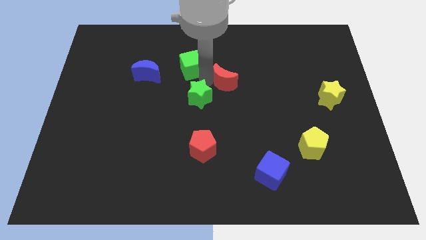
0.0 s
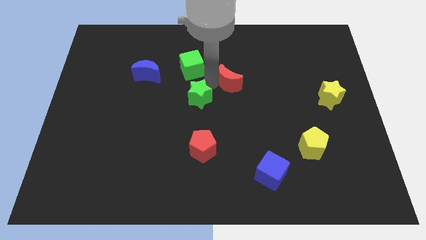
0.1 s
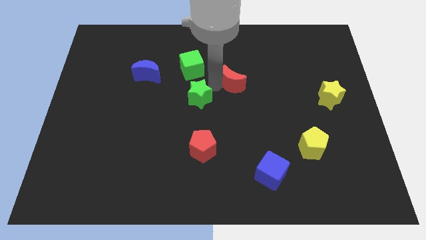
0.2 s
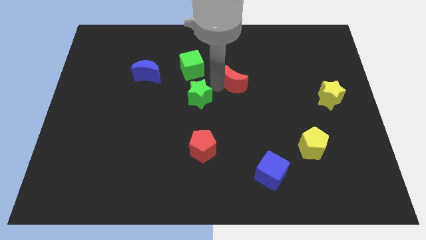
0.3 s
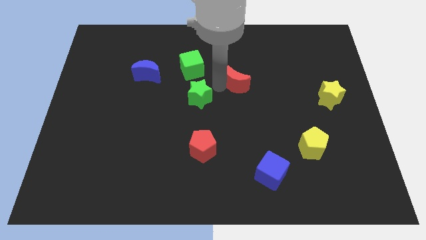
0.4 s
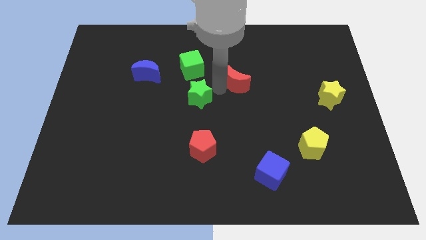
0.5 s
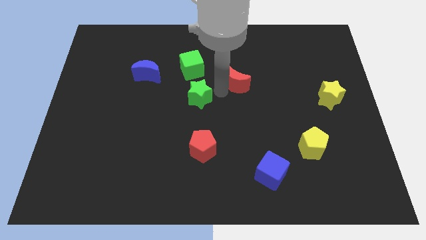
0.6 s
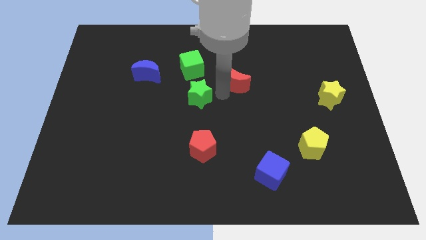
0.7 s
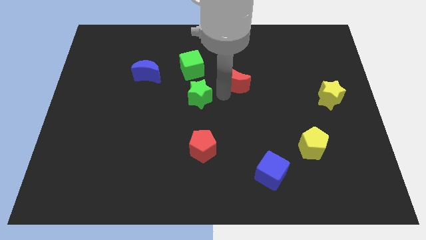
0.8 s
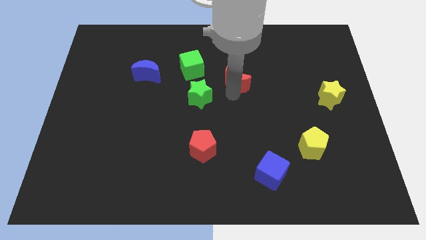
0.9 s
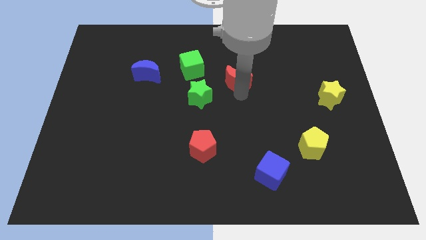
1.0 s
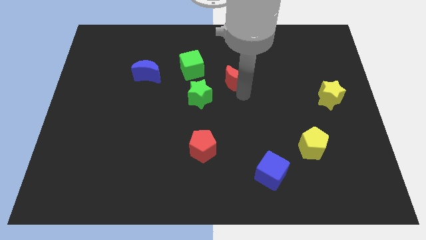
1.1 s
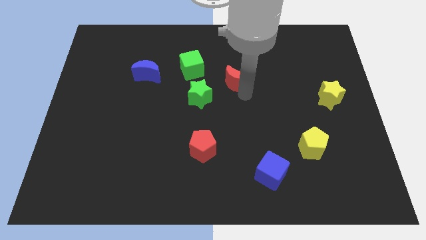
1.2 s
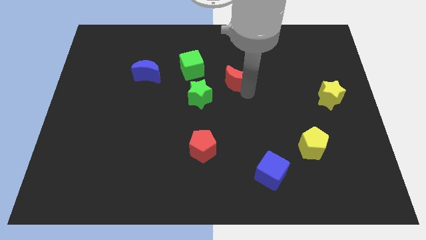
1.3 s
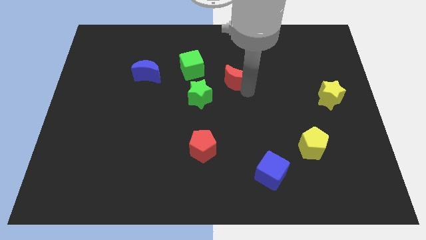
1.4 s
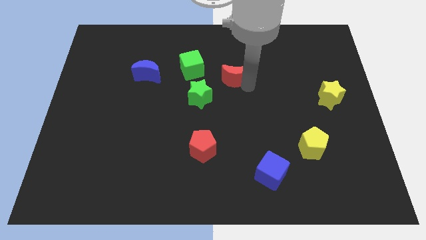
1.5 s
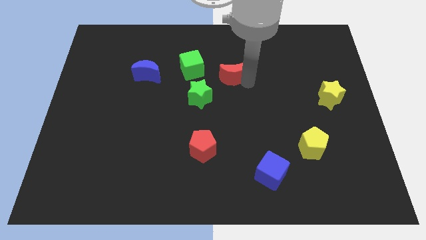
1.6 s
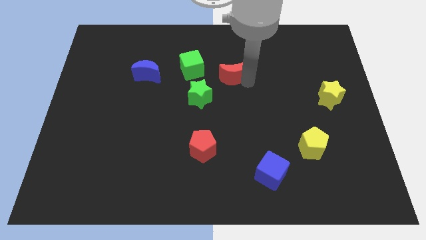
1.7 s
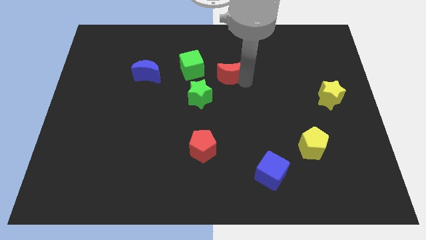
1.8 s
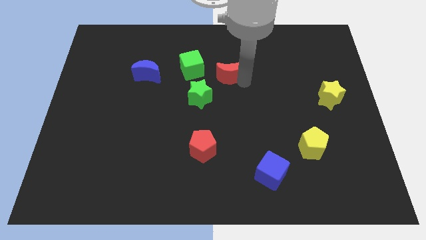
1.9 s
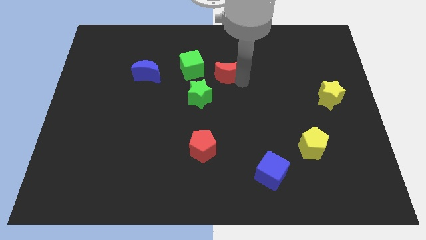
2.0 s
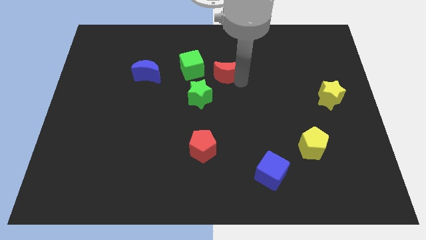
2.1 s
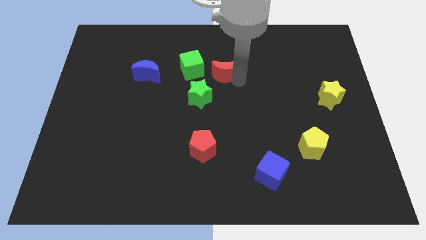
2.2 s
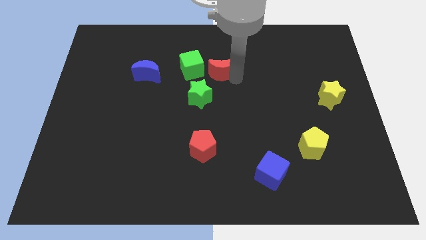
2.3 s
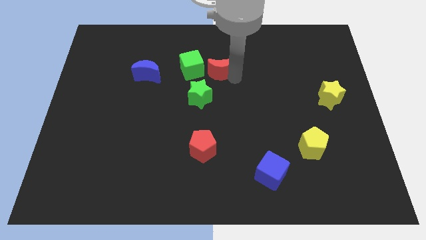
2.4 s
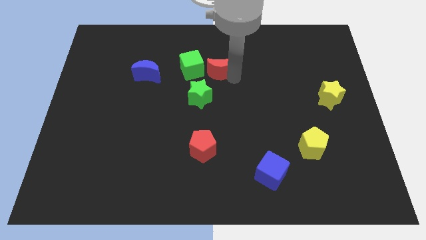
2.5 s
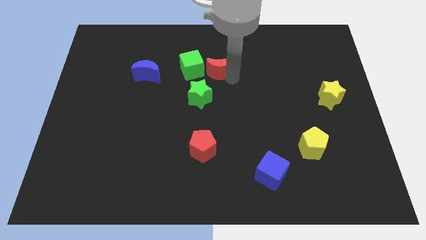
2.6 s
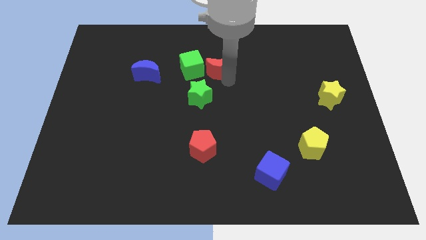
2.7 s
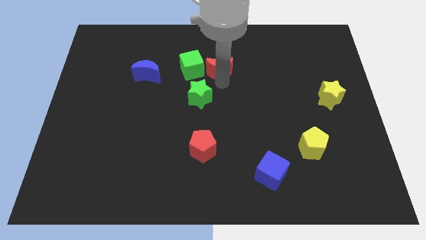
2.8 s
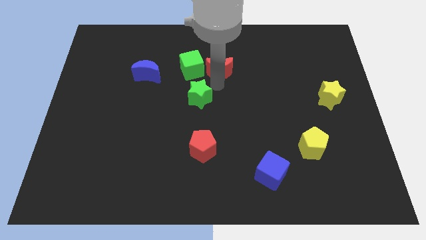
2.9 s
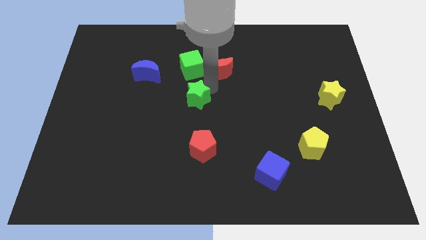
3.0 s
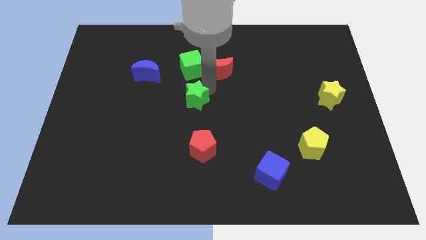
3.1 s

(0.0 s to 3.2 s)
move the red moon to the right side of the green cube

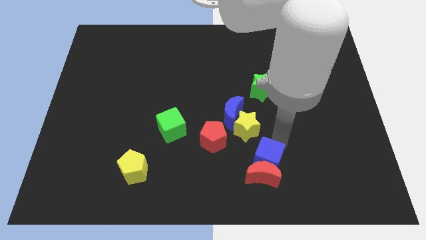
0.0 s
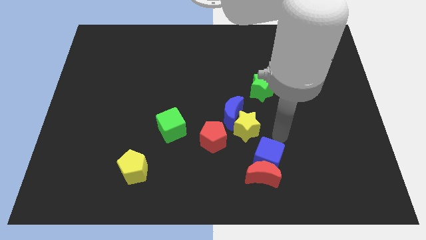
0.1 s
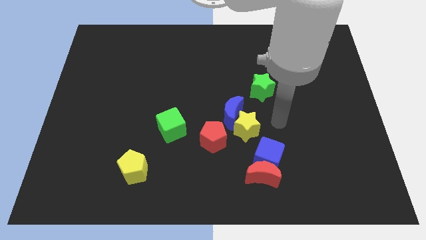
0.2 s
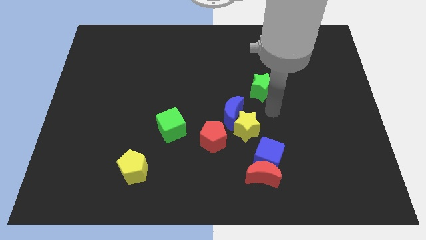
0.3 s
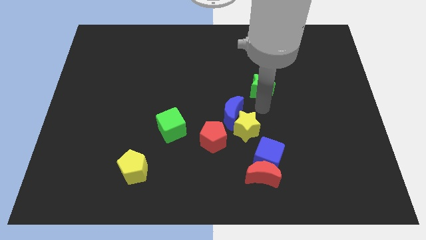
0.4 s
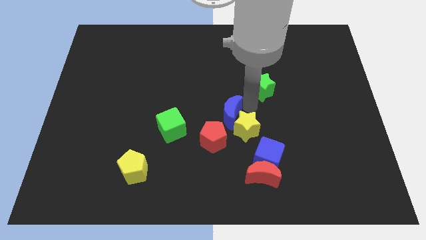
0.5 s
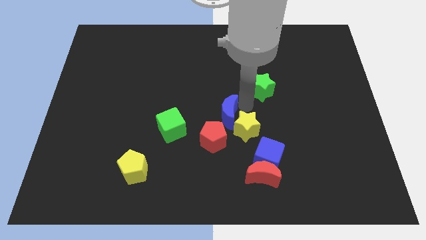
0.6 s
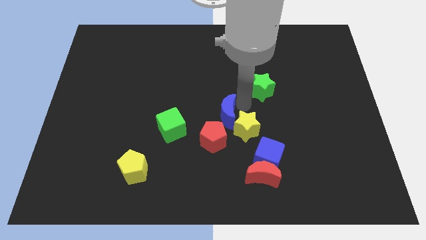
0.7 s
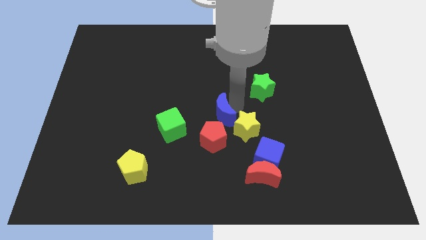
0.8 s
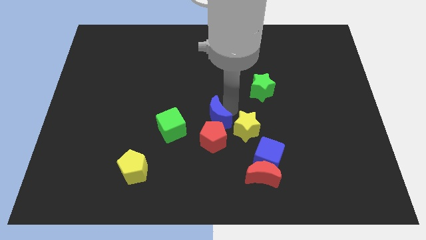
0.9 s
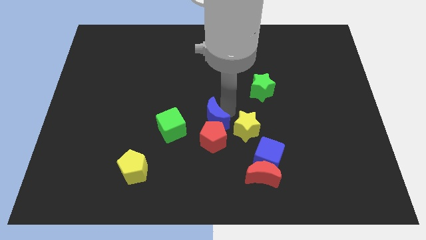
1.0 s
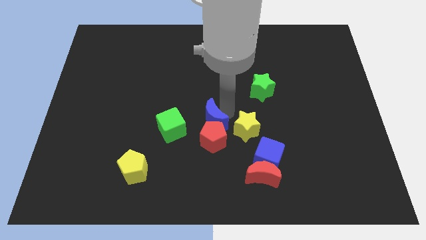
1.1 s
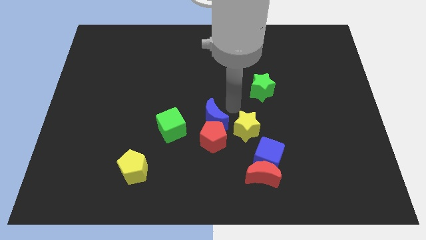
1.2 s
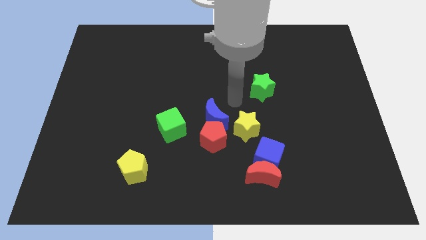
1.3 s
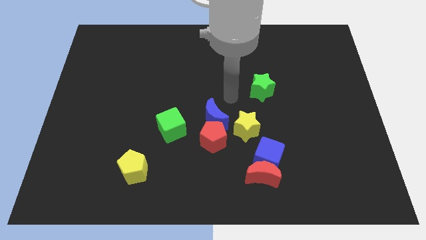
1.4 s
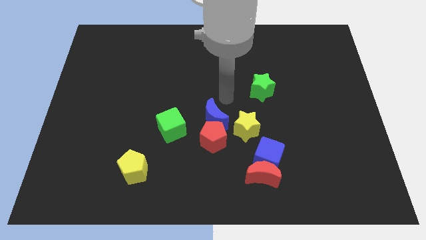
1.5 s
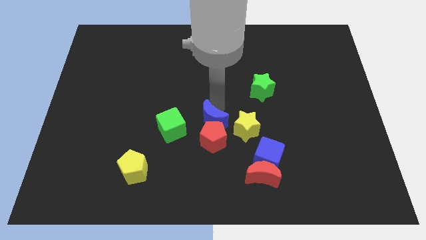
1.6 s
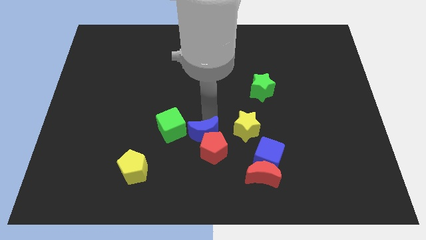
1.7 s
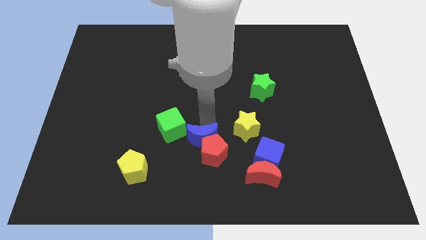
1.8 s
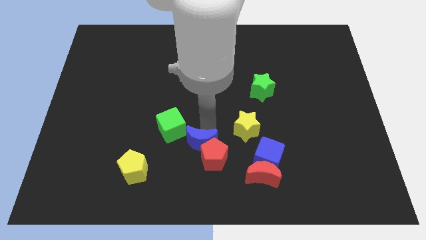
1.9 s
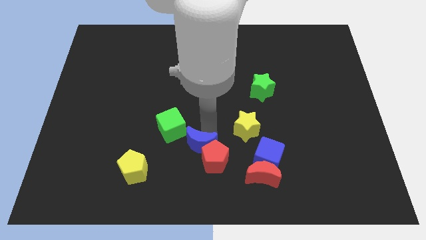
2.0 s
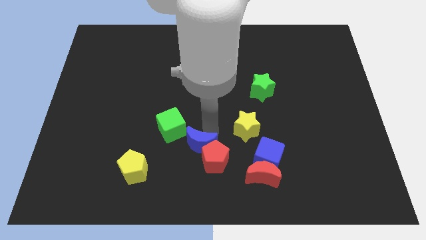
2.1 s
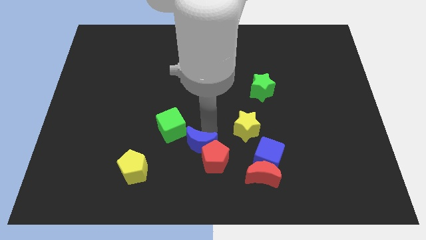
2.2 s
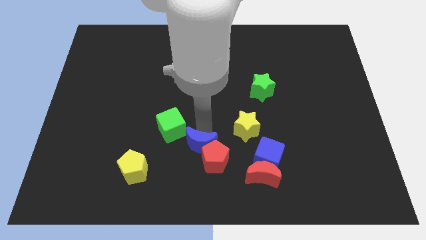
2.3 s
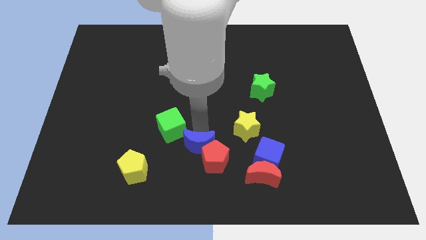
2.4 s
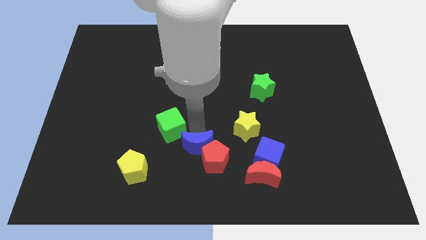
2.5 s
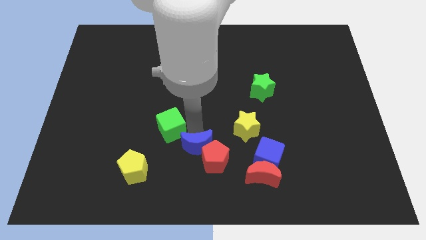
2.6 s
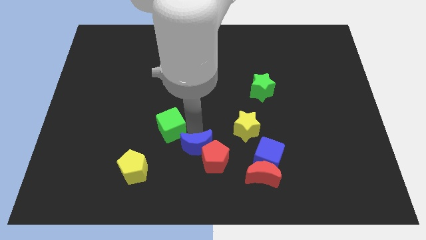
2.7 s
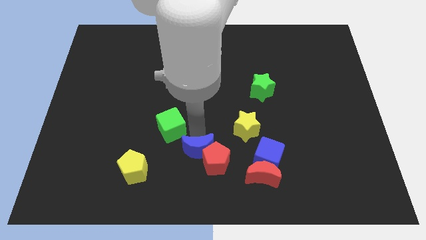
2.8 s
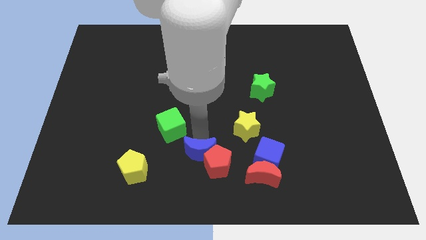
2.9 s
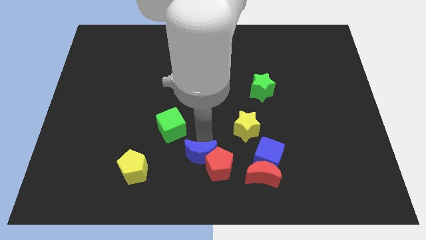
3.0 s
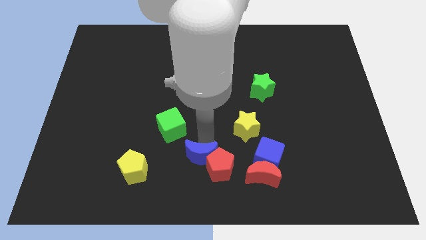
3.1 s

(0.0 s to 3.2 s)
push the blue moon into the red pentagon

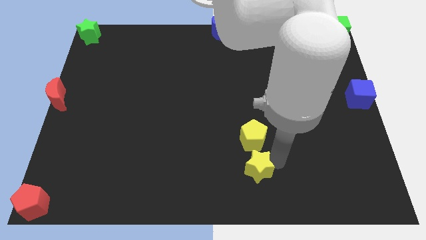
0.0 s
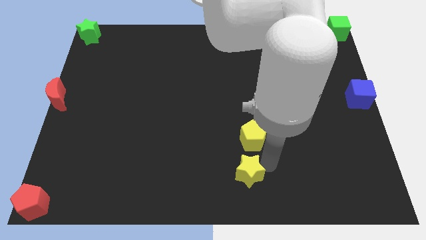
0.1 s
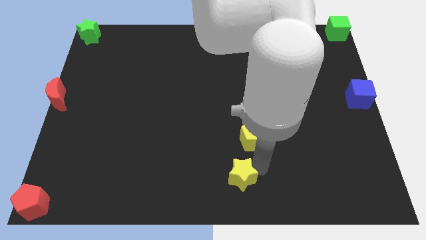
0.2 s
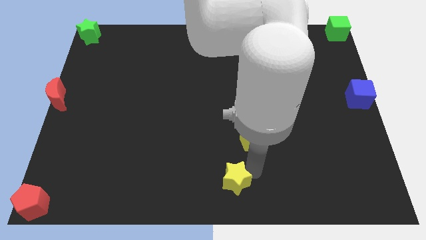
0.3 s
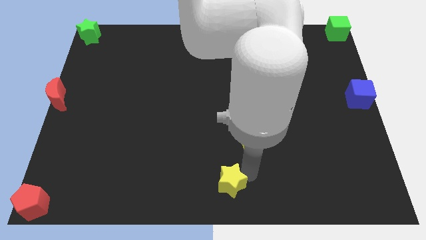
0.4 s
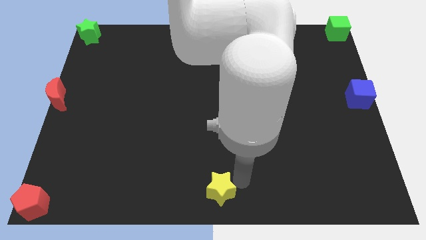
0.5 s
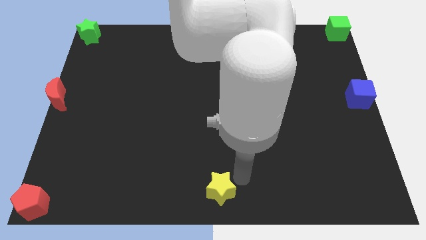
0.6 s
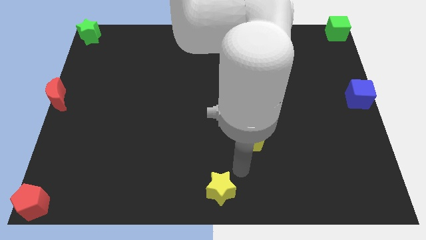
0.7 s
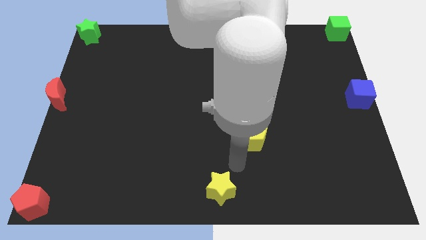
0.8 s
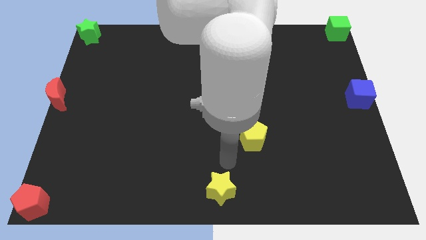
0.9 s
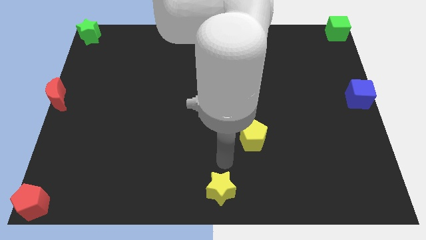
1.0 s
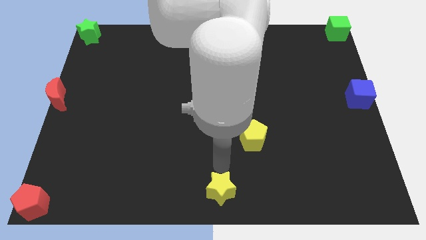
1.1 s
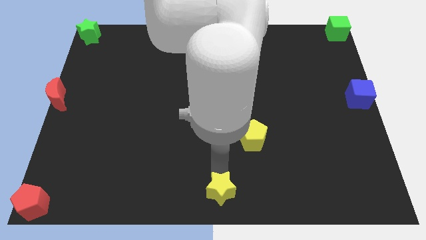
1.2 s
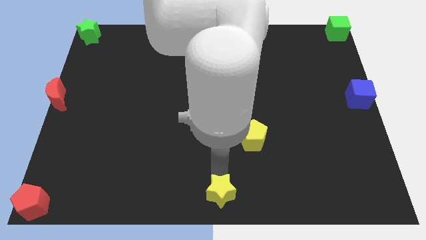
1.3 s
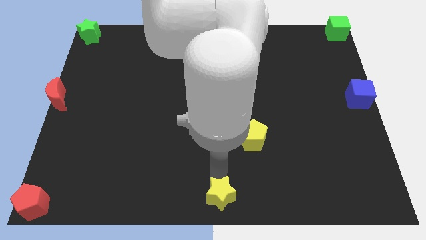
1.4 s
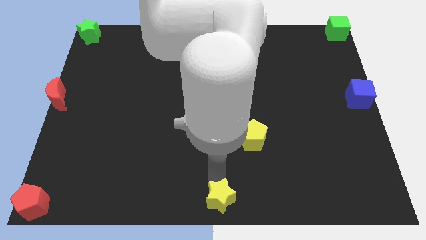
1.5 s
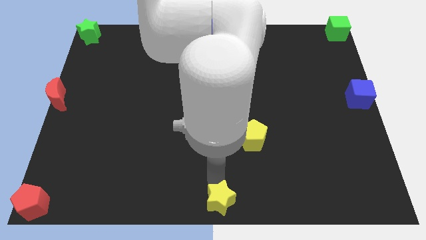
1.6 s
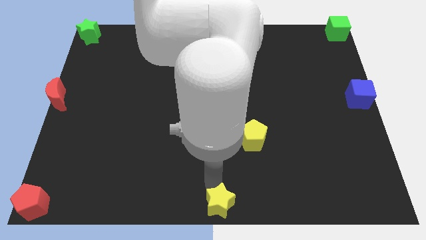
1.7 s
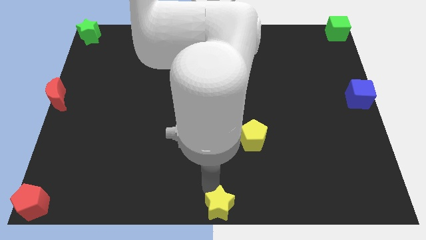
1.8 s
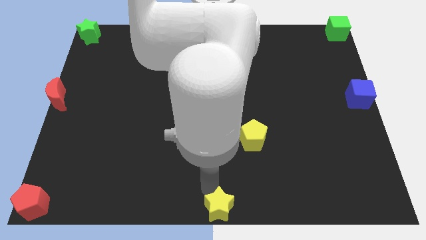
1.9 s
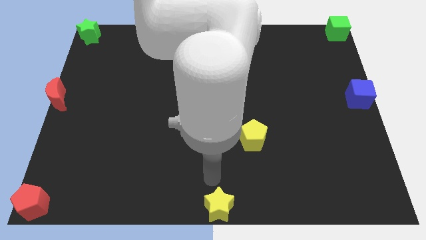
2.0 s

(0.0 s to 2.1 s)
place yellow star at the bottom center

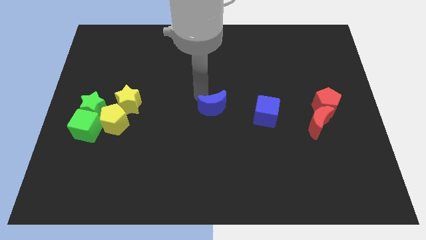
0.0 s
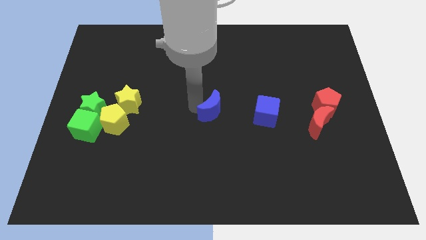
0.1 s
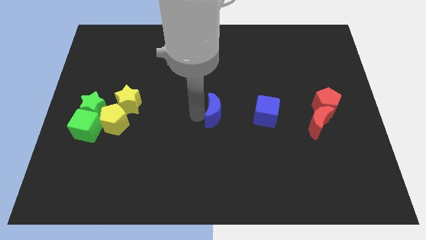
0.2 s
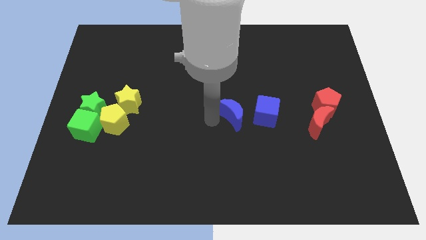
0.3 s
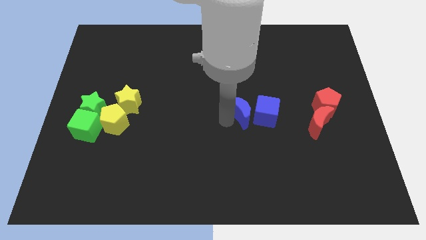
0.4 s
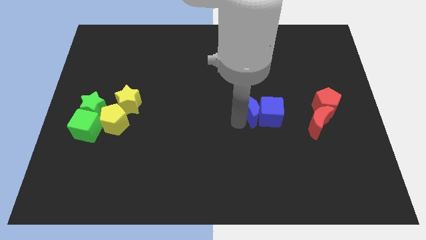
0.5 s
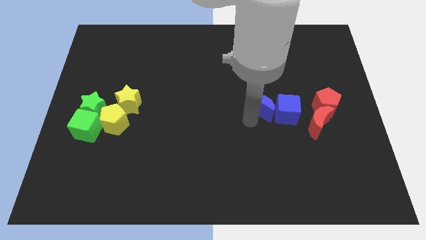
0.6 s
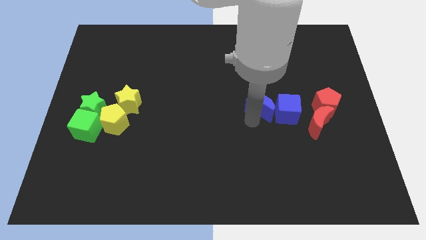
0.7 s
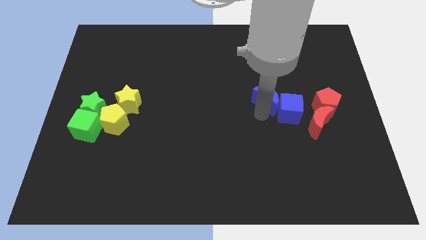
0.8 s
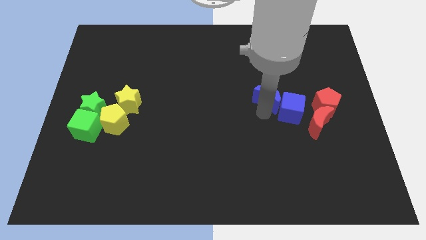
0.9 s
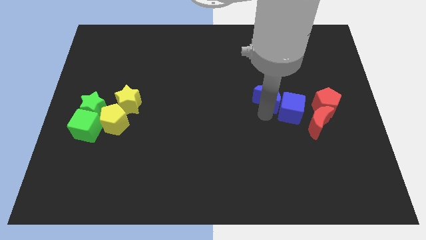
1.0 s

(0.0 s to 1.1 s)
move blue moon into blue cube
